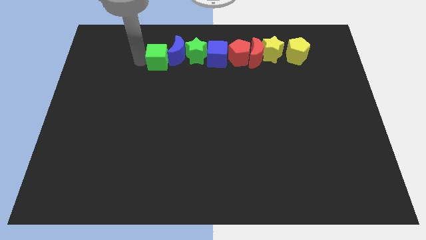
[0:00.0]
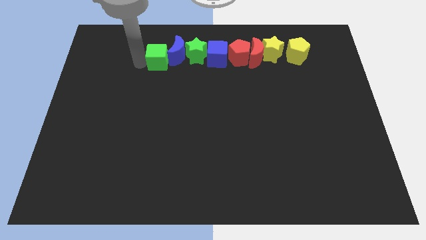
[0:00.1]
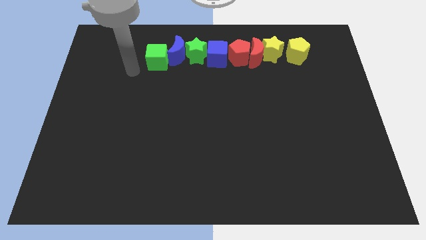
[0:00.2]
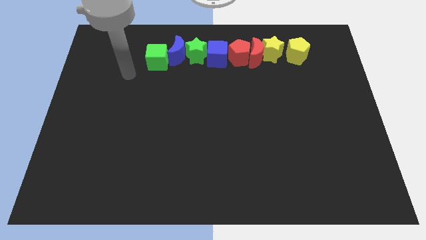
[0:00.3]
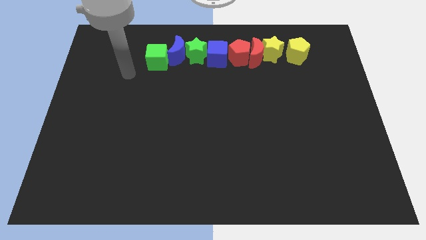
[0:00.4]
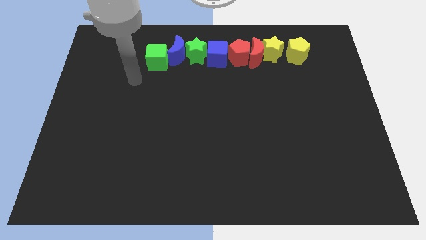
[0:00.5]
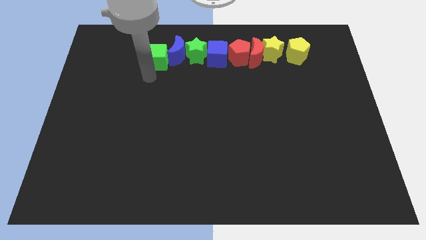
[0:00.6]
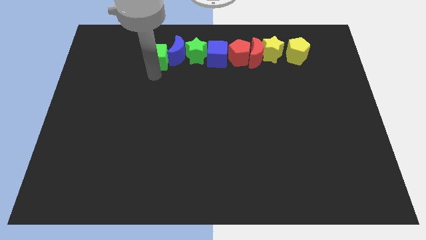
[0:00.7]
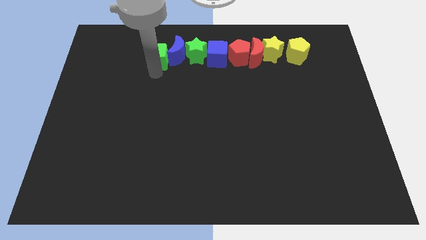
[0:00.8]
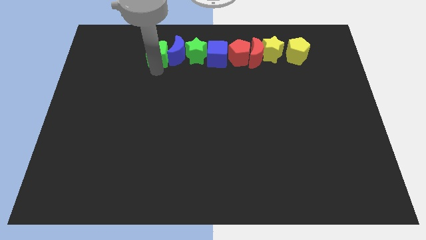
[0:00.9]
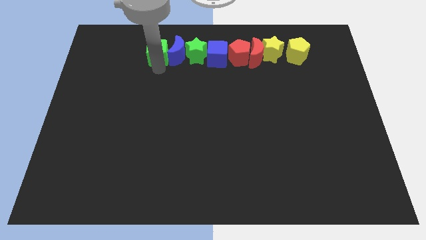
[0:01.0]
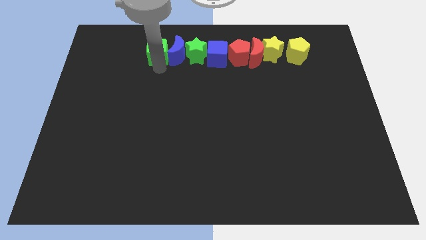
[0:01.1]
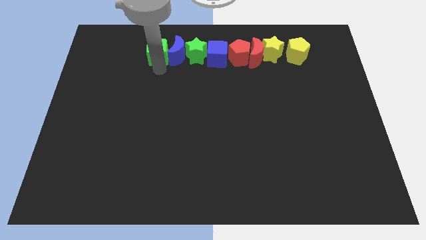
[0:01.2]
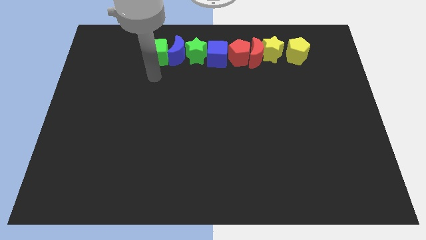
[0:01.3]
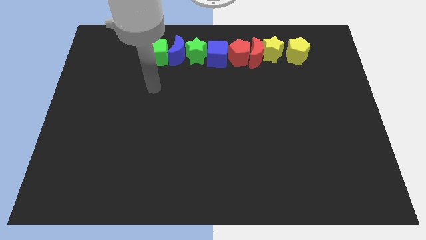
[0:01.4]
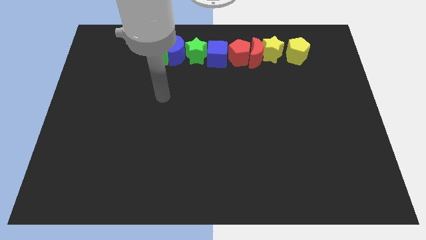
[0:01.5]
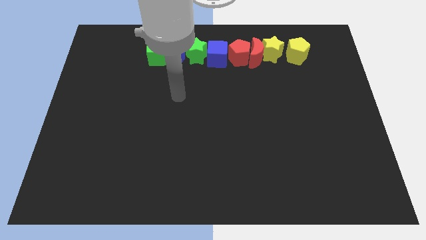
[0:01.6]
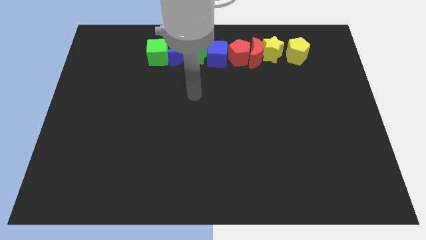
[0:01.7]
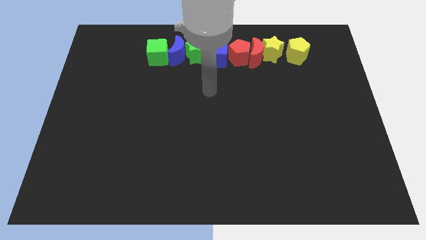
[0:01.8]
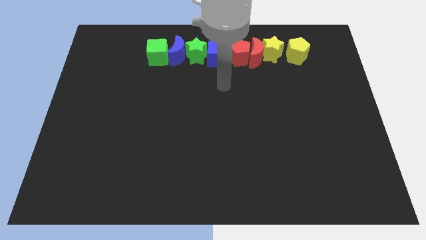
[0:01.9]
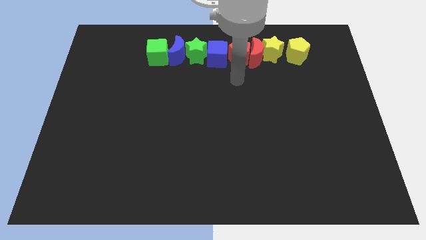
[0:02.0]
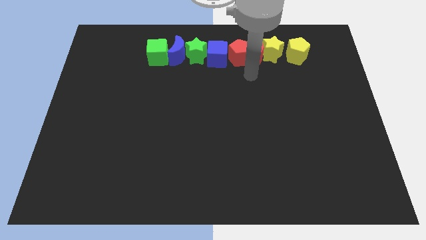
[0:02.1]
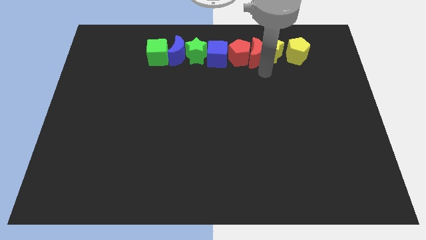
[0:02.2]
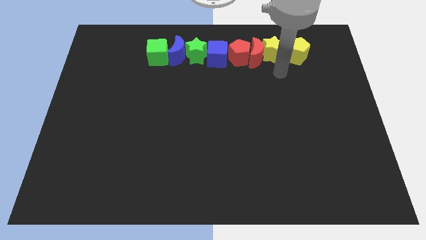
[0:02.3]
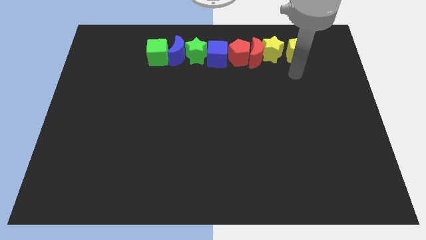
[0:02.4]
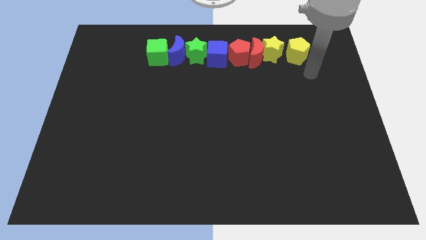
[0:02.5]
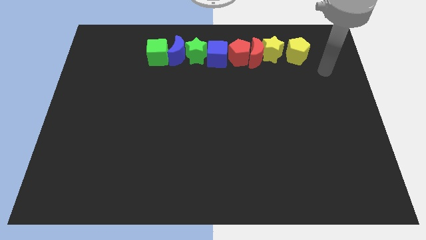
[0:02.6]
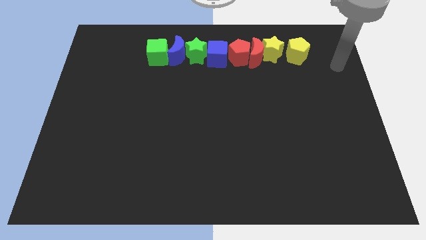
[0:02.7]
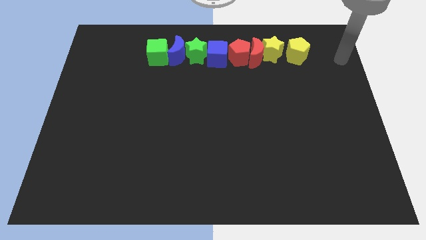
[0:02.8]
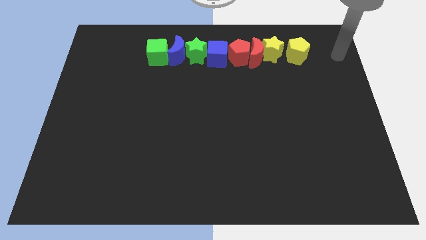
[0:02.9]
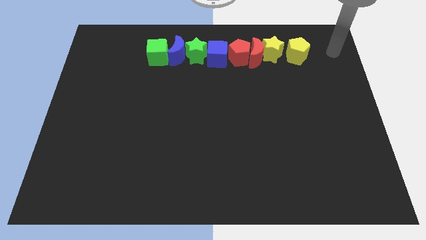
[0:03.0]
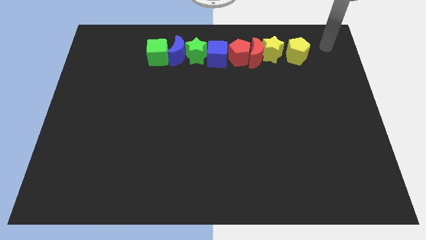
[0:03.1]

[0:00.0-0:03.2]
move the arm towards the top right

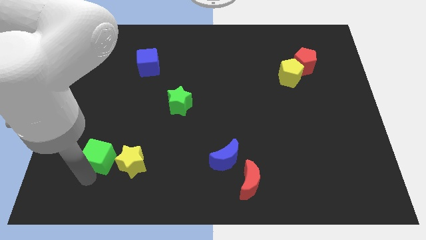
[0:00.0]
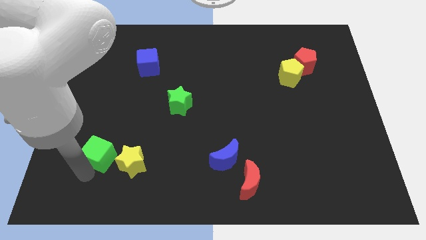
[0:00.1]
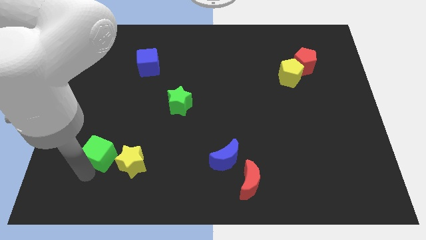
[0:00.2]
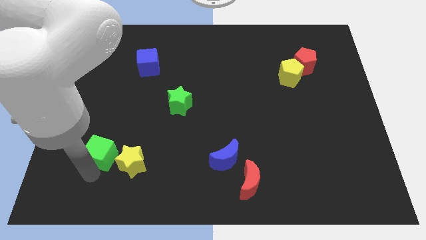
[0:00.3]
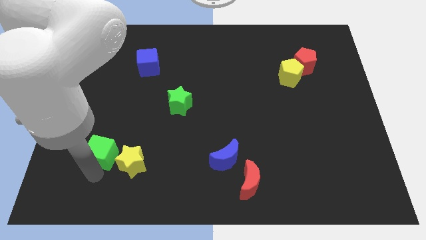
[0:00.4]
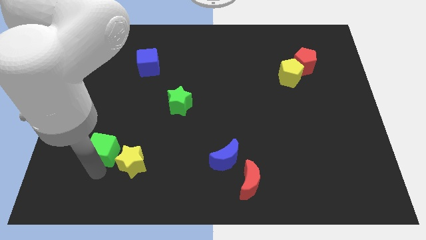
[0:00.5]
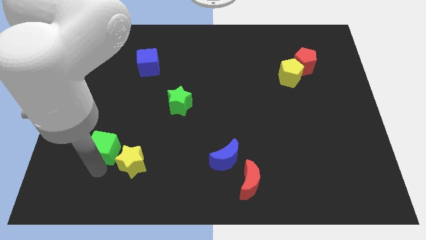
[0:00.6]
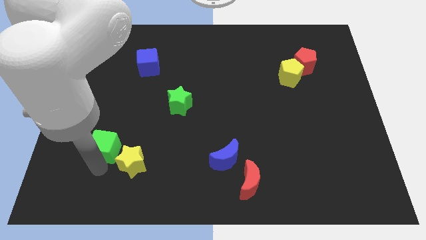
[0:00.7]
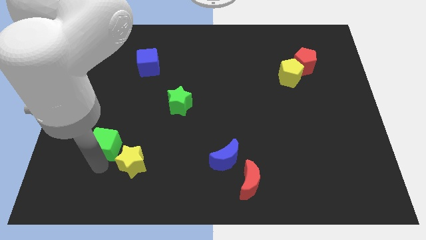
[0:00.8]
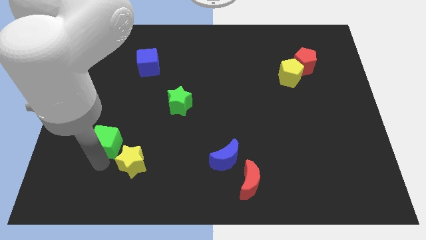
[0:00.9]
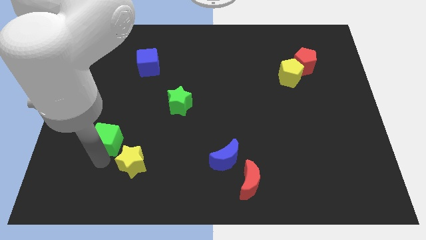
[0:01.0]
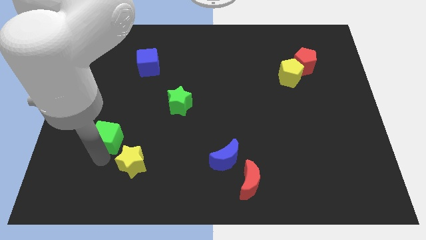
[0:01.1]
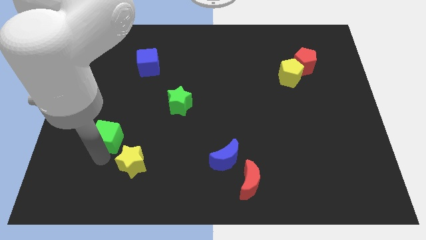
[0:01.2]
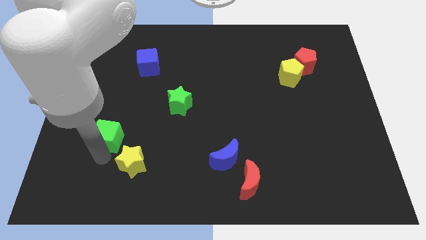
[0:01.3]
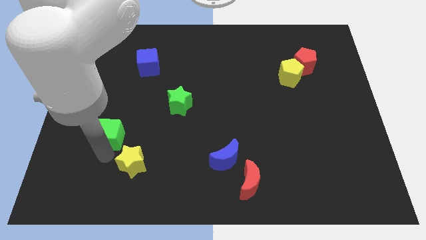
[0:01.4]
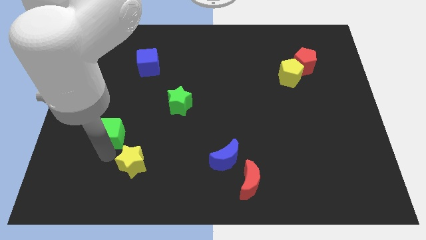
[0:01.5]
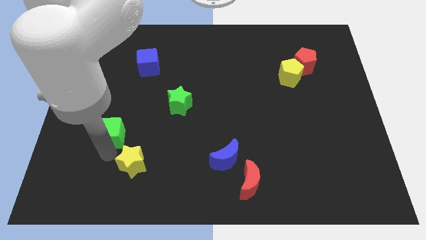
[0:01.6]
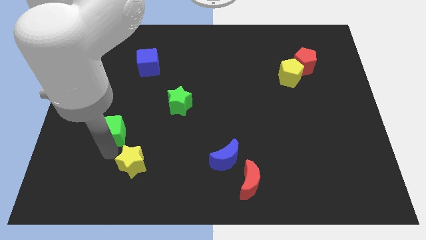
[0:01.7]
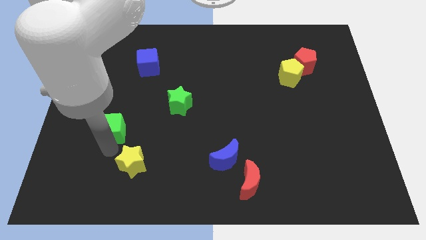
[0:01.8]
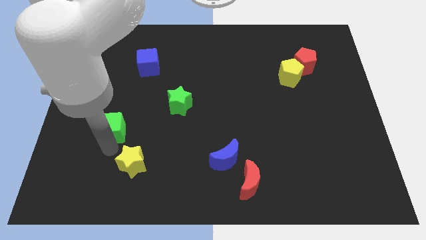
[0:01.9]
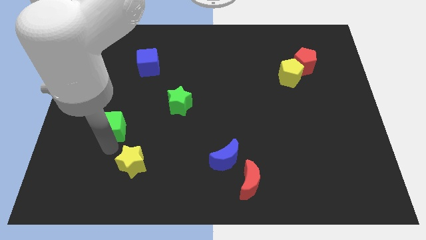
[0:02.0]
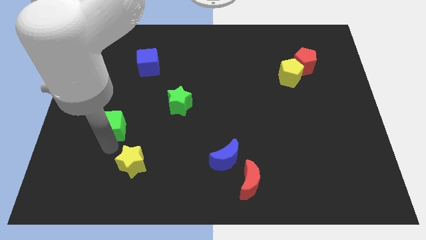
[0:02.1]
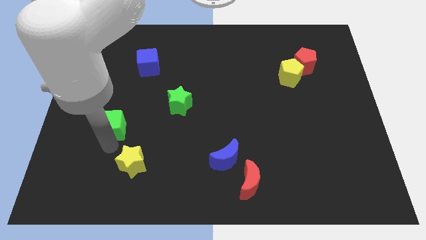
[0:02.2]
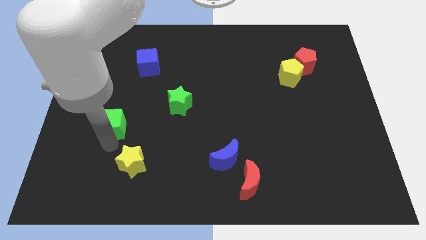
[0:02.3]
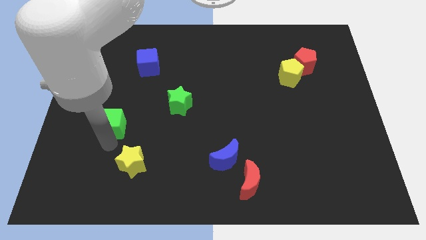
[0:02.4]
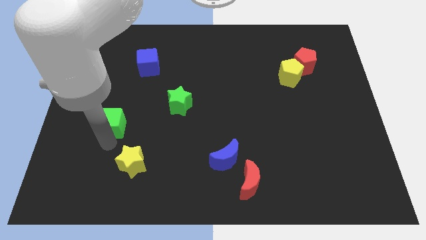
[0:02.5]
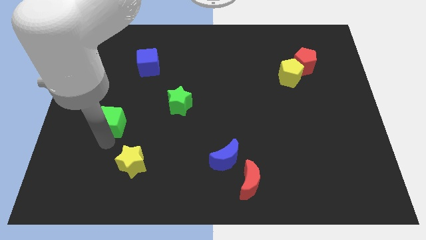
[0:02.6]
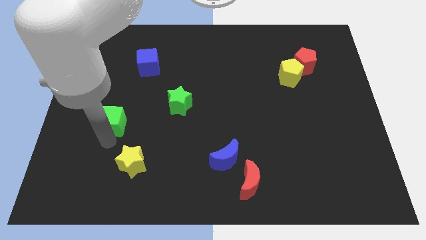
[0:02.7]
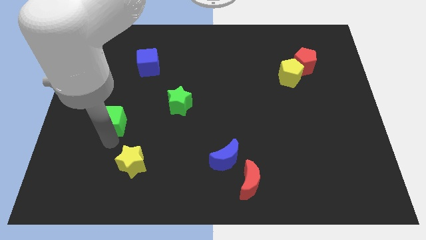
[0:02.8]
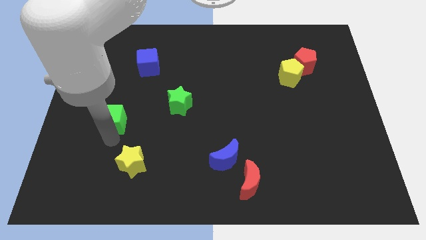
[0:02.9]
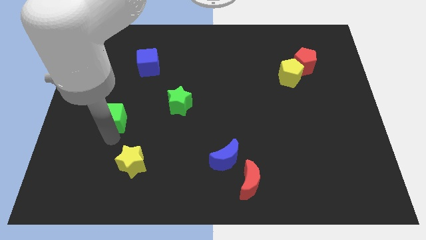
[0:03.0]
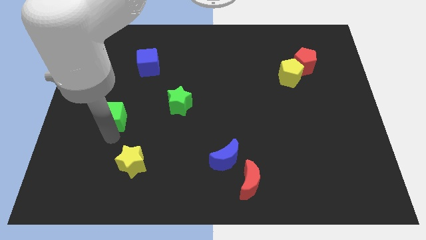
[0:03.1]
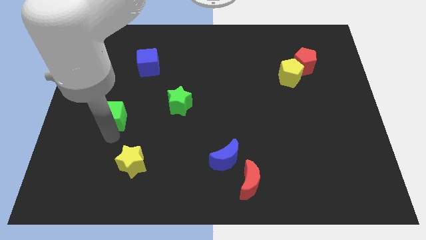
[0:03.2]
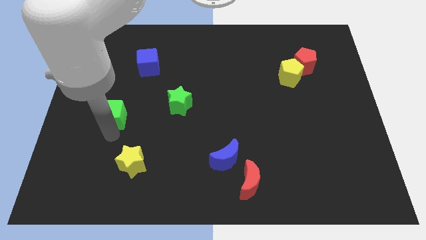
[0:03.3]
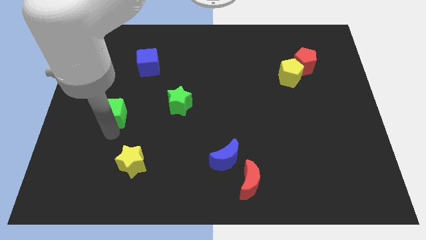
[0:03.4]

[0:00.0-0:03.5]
place the green cube left to the green star

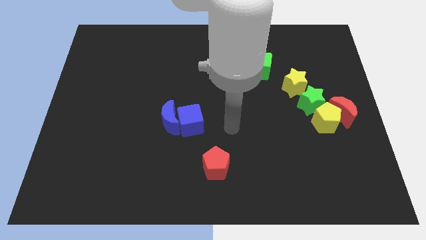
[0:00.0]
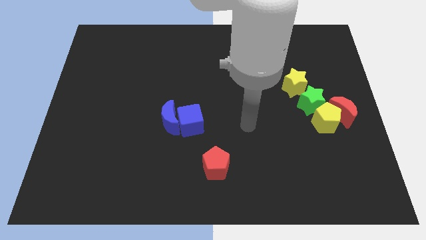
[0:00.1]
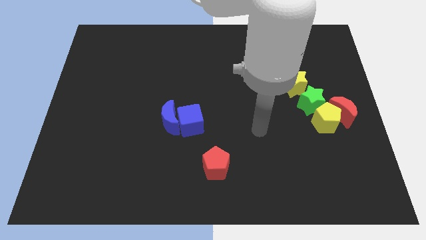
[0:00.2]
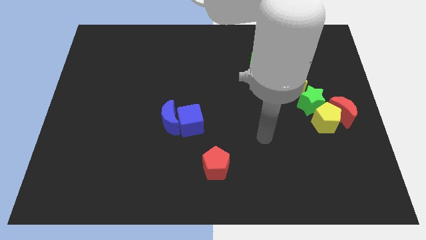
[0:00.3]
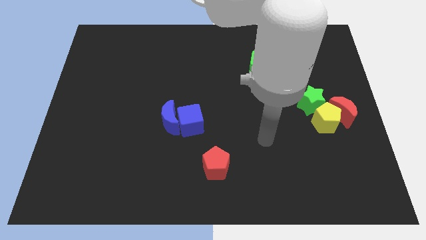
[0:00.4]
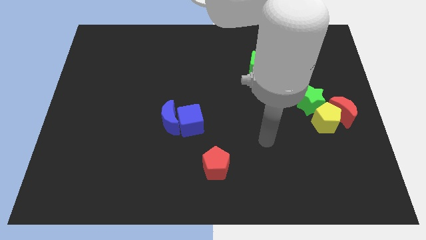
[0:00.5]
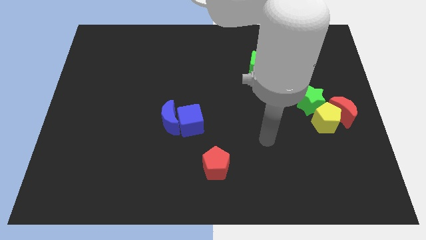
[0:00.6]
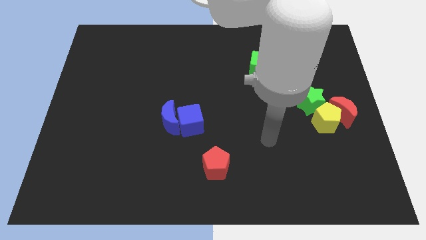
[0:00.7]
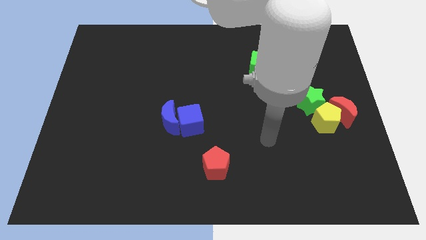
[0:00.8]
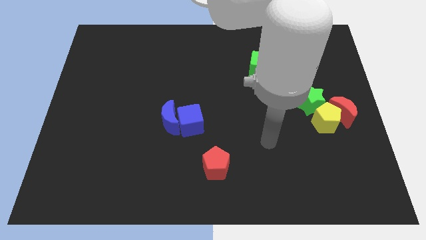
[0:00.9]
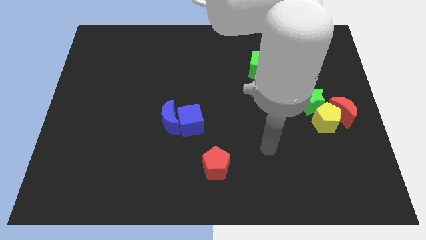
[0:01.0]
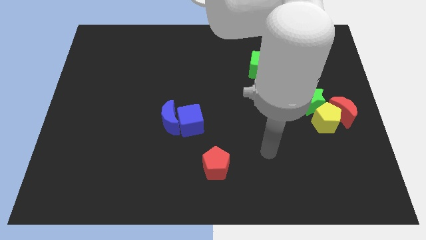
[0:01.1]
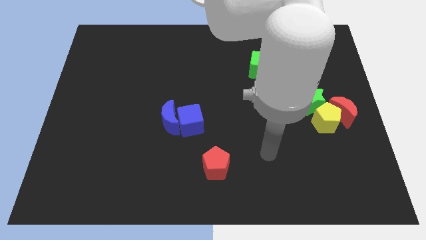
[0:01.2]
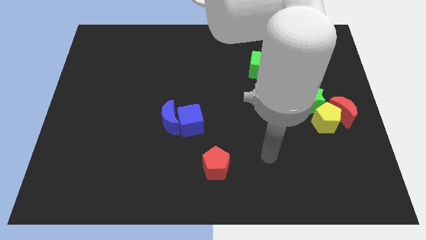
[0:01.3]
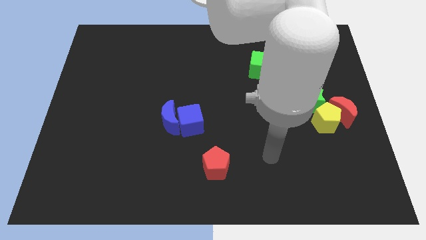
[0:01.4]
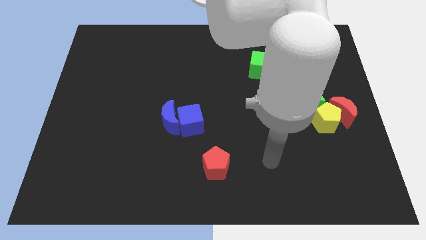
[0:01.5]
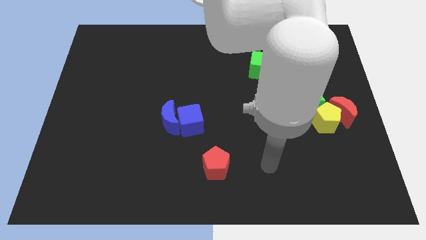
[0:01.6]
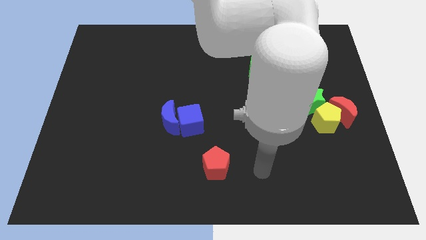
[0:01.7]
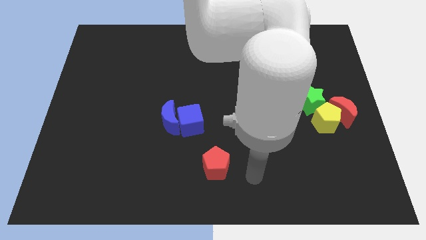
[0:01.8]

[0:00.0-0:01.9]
place your arm at the right of the red pentagon

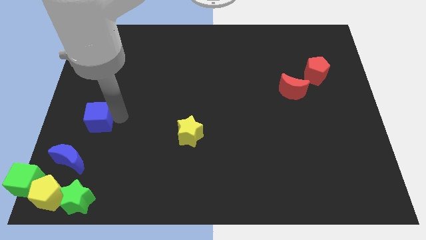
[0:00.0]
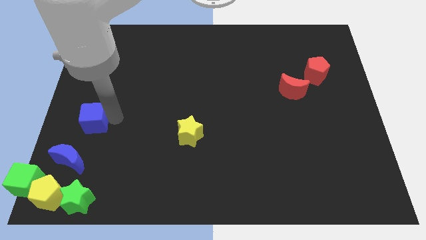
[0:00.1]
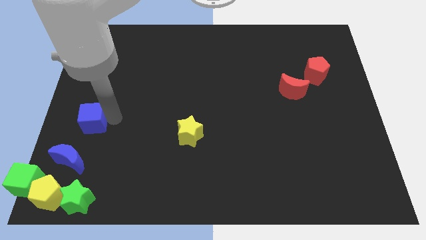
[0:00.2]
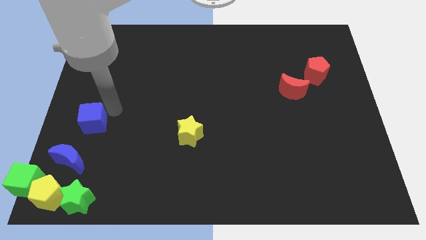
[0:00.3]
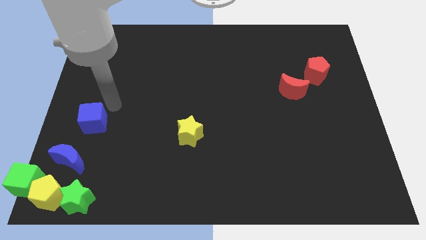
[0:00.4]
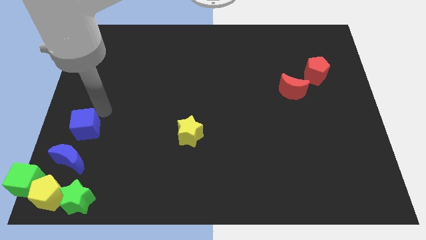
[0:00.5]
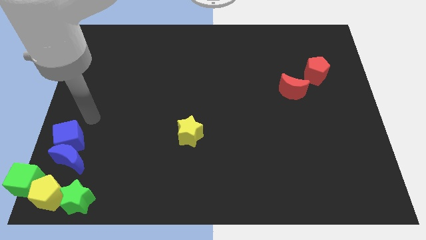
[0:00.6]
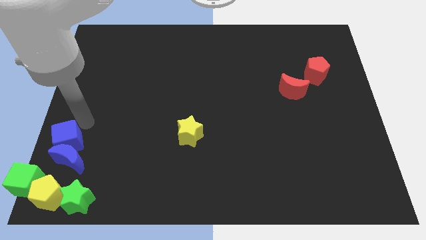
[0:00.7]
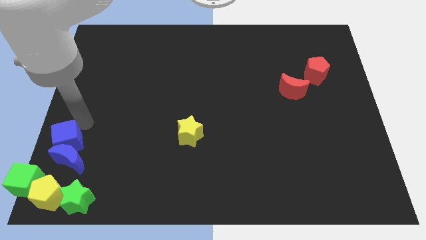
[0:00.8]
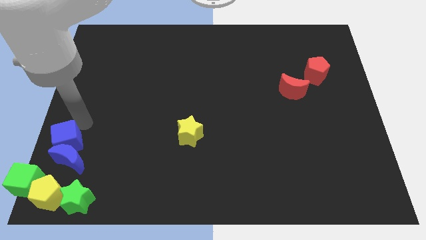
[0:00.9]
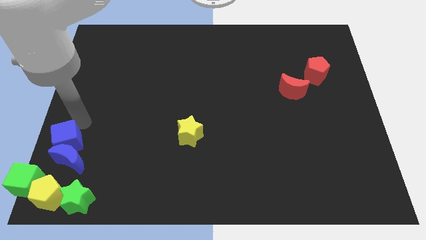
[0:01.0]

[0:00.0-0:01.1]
place blue cube above the blue moon
